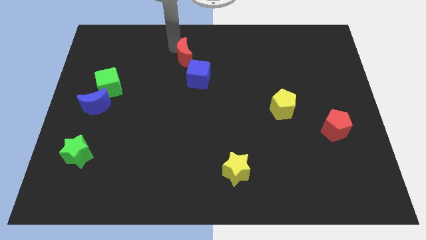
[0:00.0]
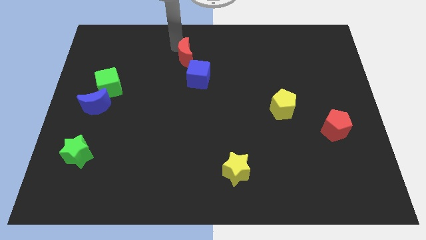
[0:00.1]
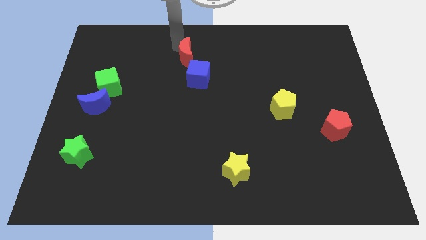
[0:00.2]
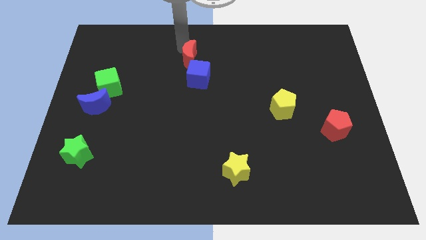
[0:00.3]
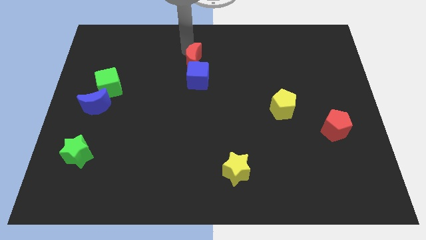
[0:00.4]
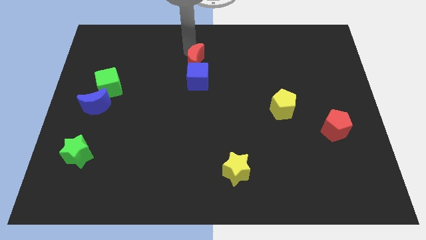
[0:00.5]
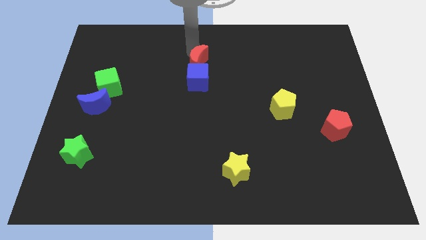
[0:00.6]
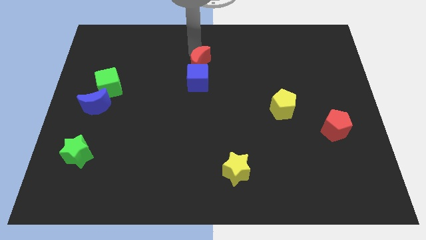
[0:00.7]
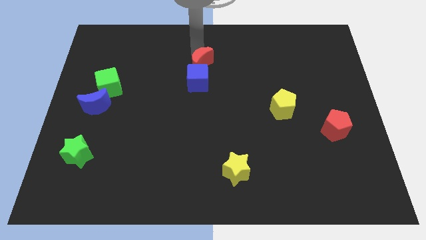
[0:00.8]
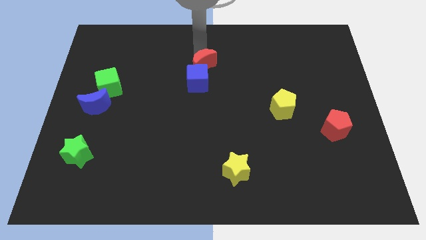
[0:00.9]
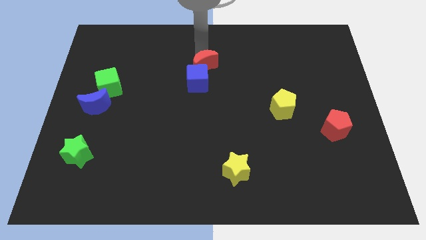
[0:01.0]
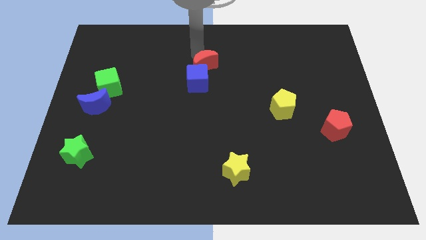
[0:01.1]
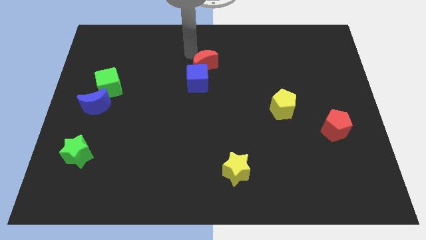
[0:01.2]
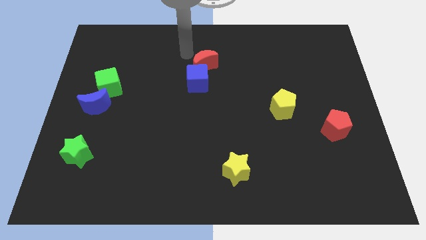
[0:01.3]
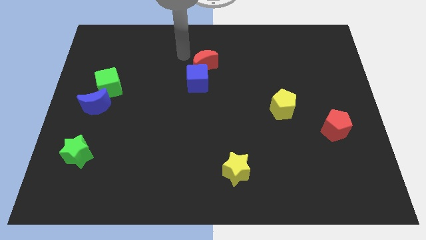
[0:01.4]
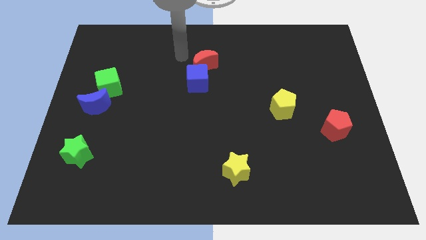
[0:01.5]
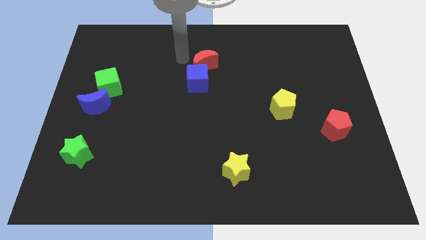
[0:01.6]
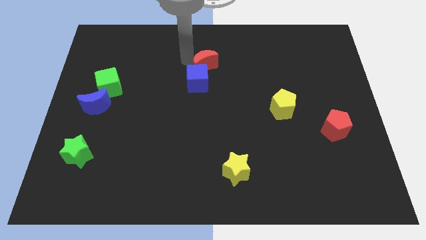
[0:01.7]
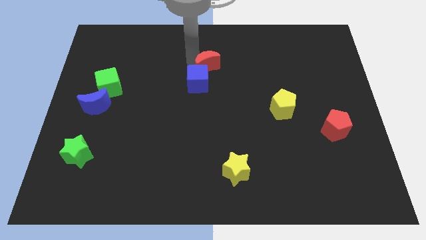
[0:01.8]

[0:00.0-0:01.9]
push the red moon into the blue cube

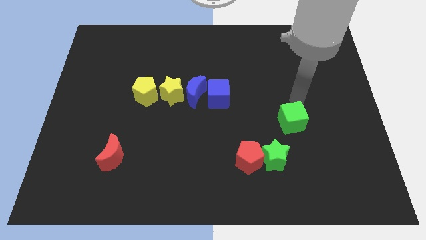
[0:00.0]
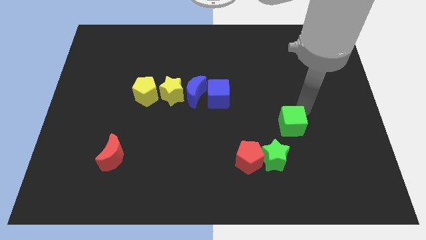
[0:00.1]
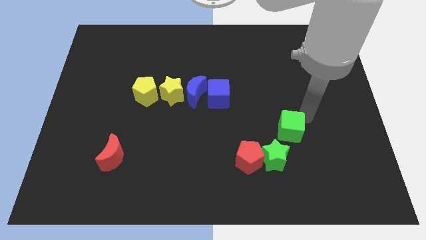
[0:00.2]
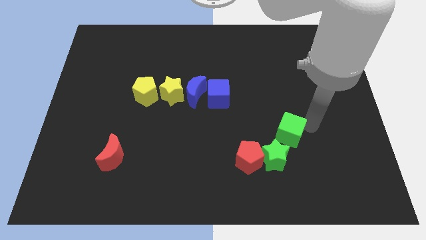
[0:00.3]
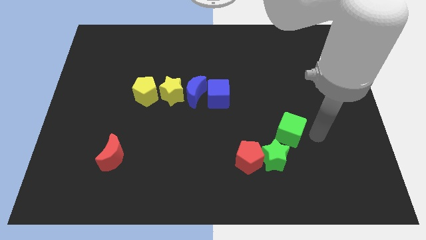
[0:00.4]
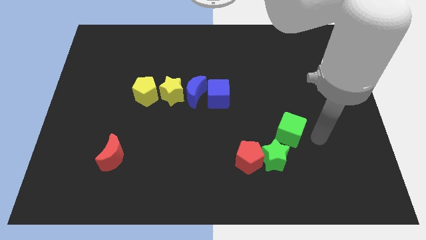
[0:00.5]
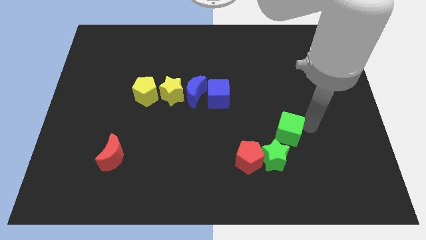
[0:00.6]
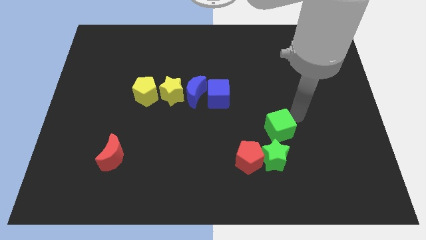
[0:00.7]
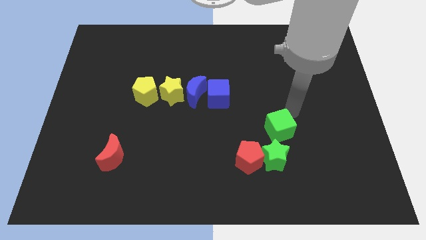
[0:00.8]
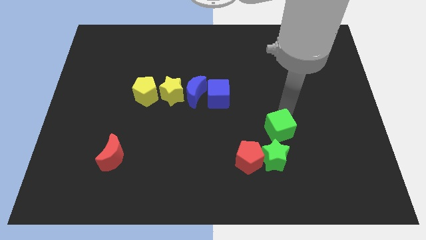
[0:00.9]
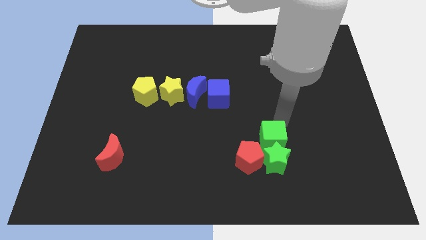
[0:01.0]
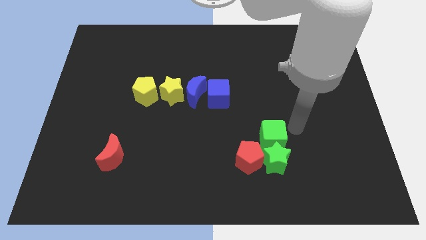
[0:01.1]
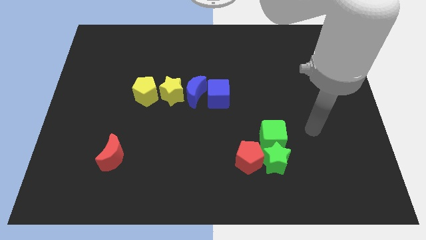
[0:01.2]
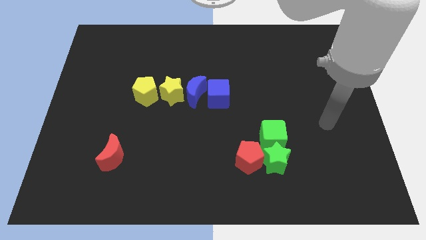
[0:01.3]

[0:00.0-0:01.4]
make a group with the red pentagon green star and green cube

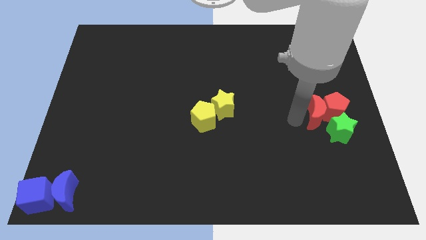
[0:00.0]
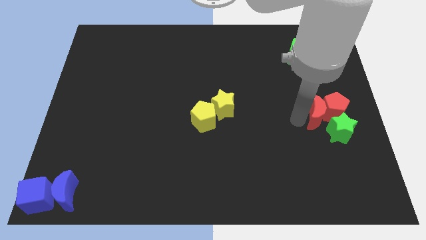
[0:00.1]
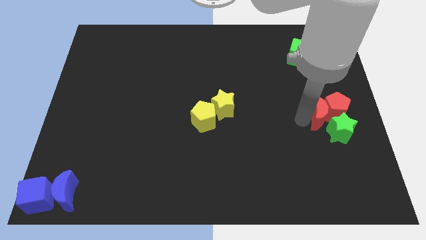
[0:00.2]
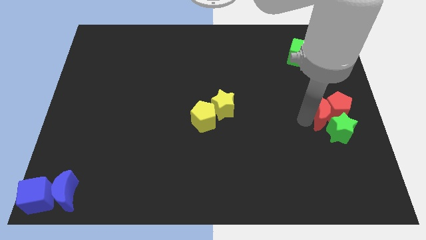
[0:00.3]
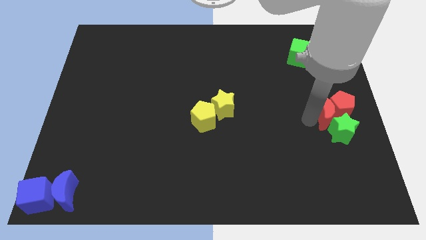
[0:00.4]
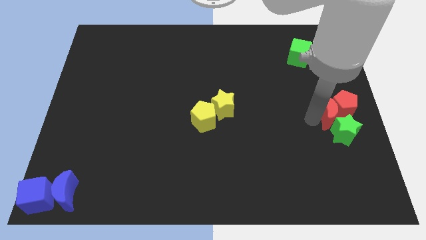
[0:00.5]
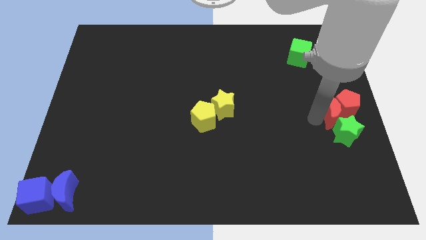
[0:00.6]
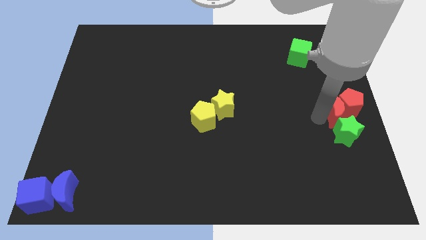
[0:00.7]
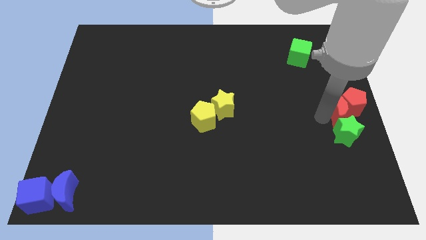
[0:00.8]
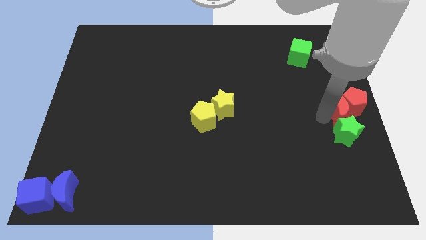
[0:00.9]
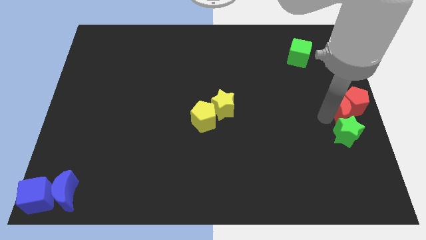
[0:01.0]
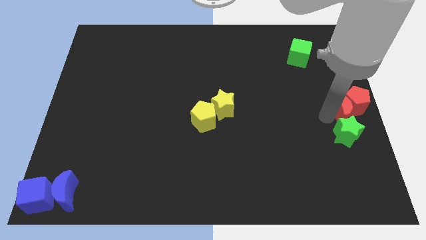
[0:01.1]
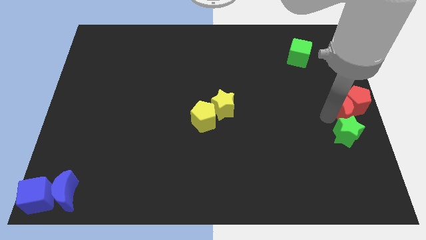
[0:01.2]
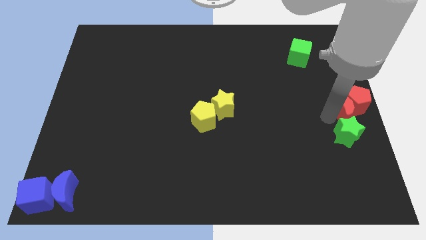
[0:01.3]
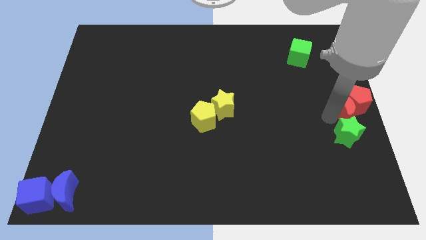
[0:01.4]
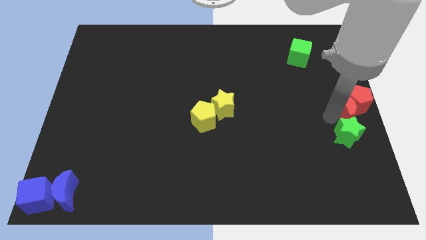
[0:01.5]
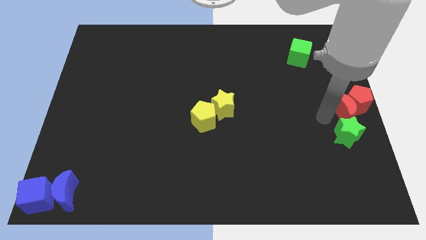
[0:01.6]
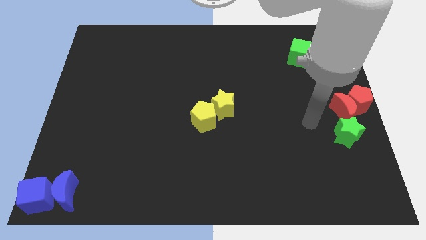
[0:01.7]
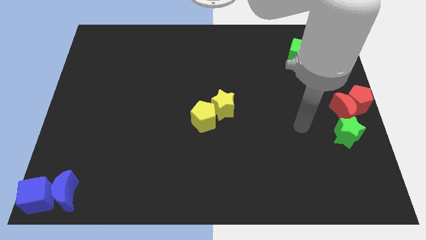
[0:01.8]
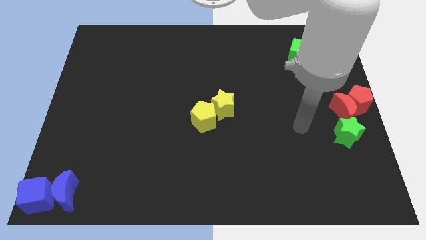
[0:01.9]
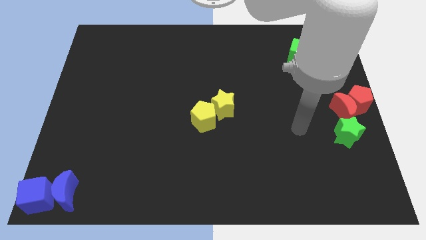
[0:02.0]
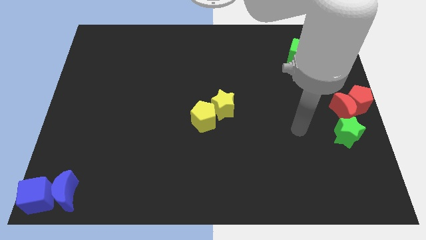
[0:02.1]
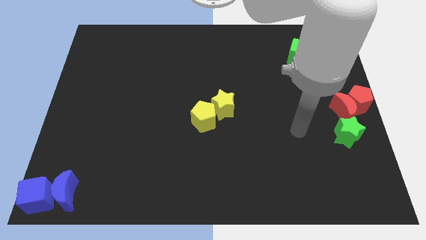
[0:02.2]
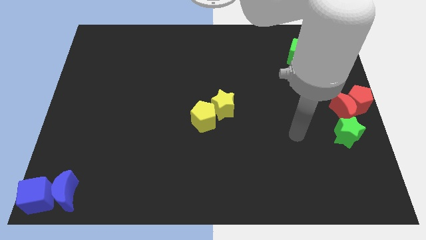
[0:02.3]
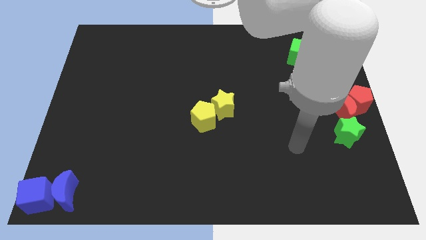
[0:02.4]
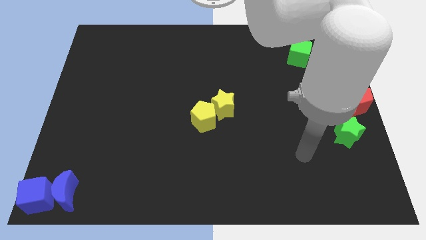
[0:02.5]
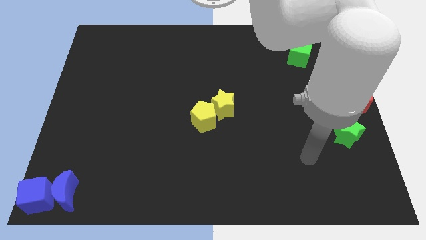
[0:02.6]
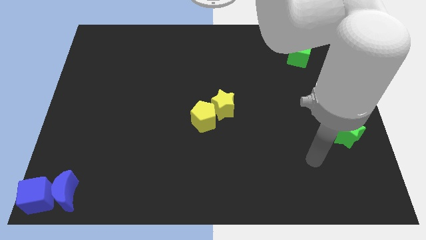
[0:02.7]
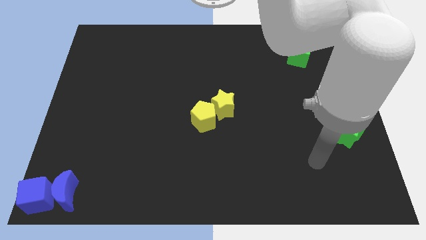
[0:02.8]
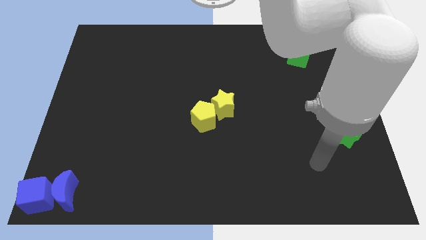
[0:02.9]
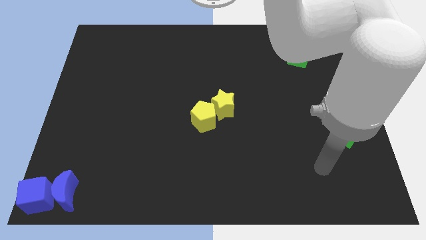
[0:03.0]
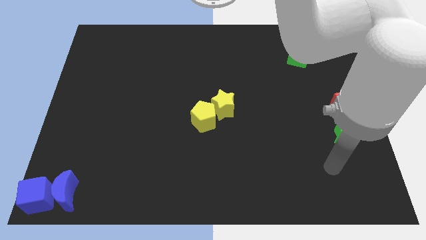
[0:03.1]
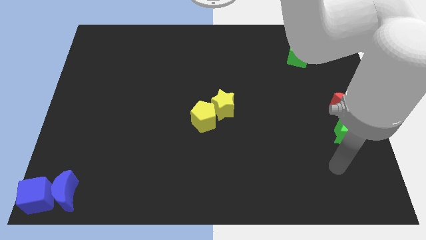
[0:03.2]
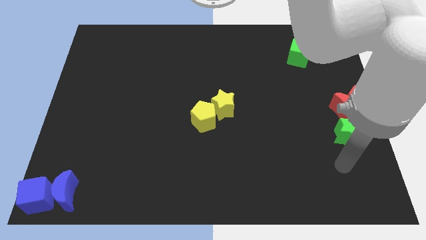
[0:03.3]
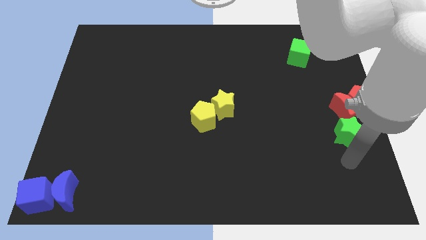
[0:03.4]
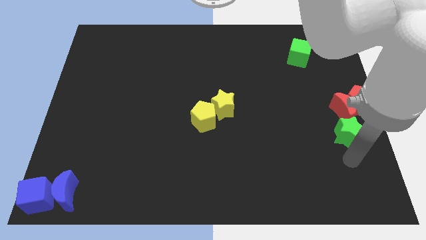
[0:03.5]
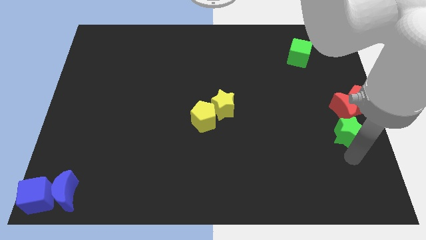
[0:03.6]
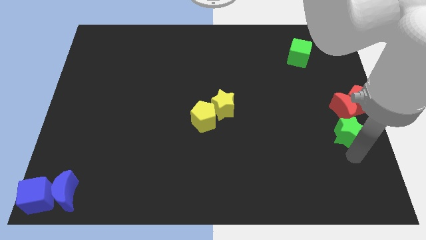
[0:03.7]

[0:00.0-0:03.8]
place the red crescent on top of green star

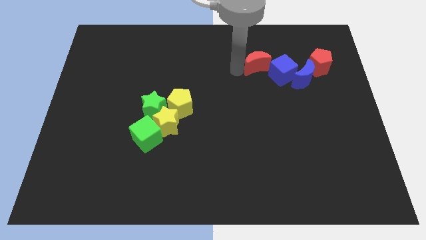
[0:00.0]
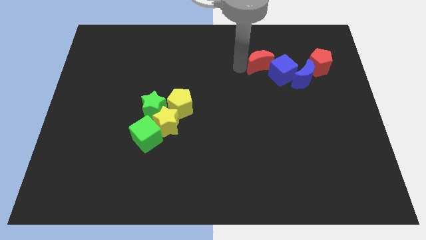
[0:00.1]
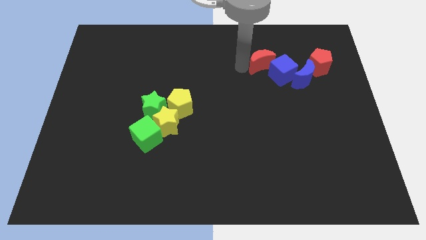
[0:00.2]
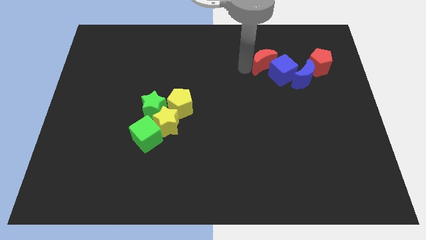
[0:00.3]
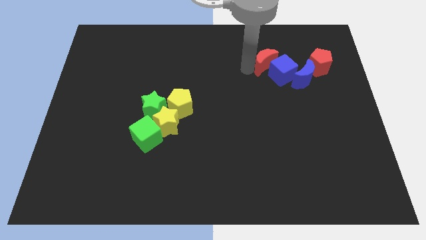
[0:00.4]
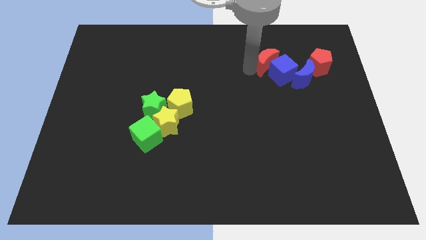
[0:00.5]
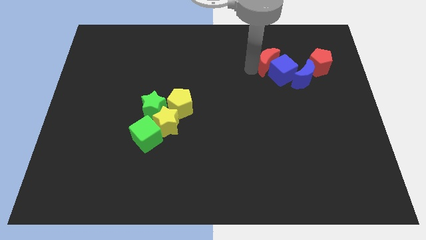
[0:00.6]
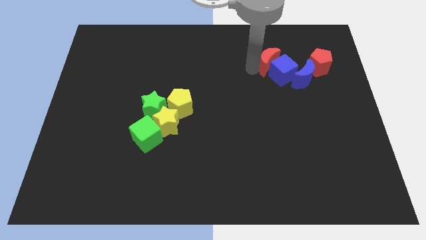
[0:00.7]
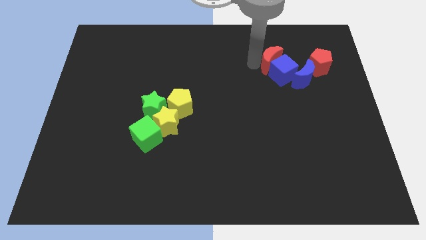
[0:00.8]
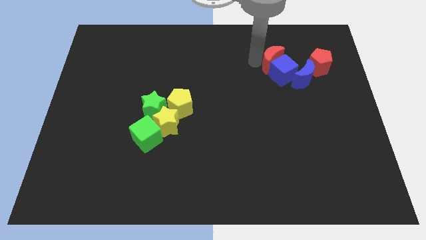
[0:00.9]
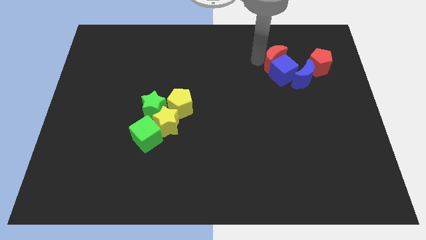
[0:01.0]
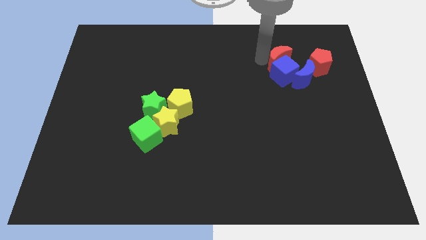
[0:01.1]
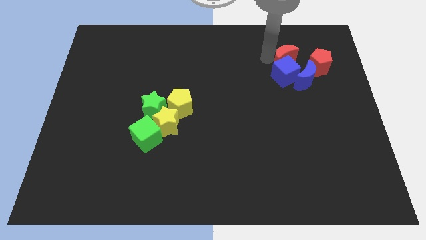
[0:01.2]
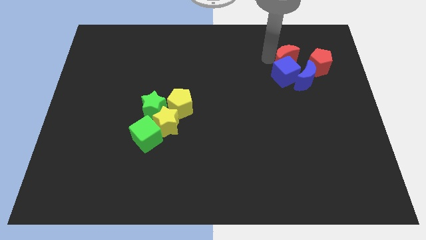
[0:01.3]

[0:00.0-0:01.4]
place the red crescent above blue cube

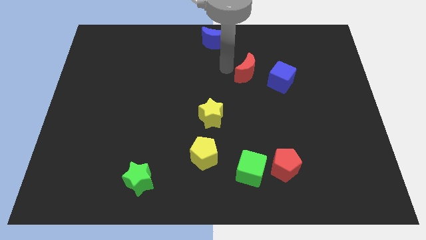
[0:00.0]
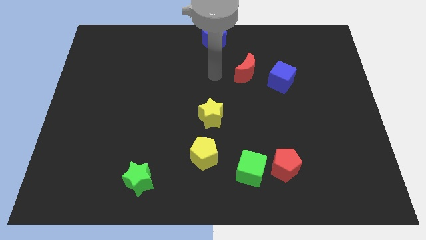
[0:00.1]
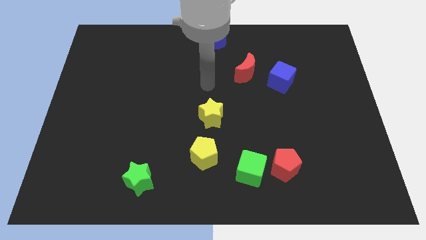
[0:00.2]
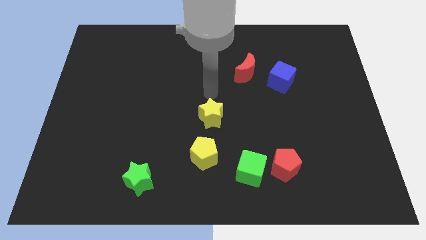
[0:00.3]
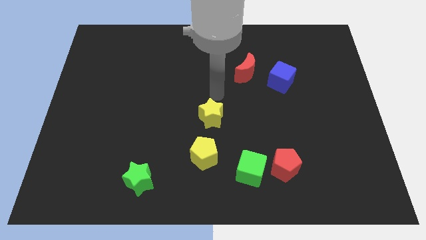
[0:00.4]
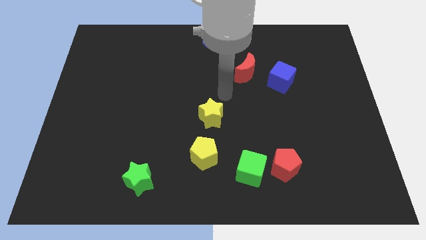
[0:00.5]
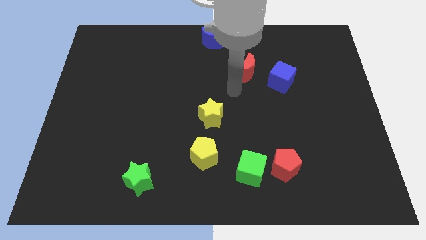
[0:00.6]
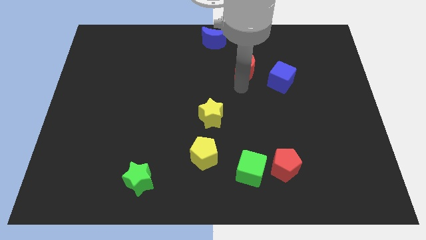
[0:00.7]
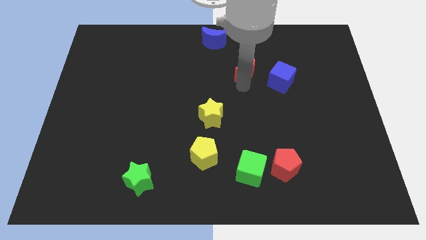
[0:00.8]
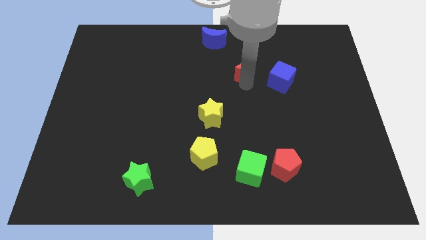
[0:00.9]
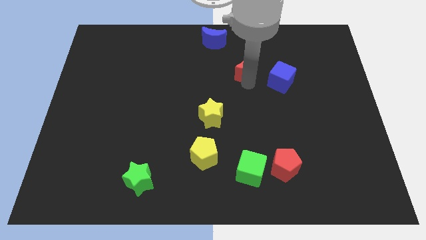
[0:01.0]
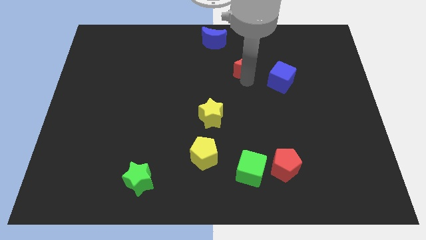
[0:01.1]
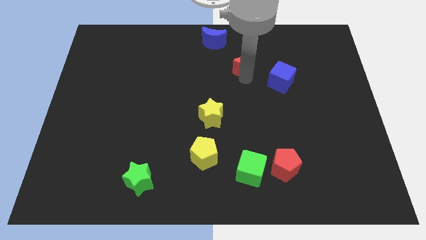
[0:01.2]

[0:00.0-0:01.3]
place red moon in between two blue blocks
